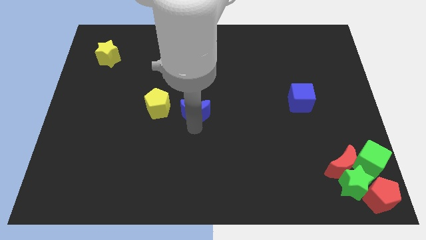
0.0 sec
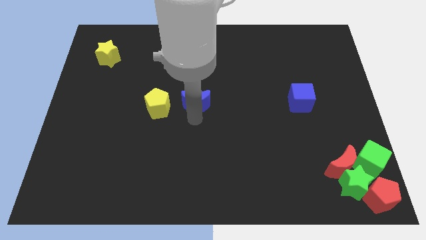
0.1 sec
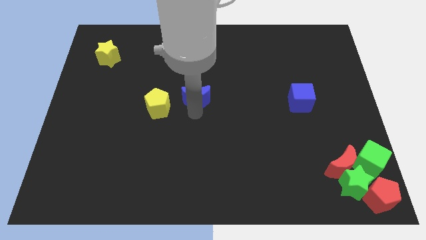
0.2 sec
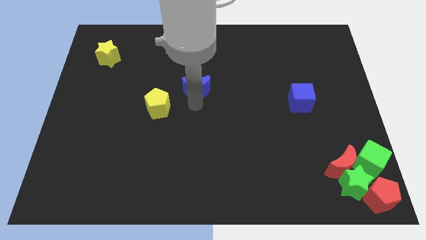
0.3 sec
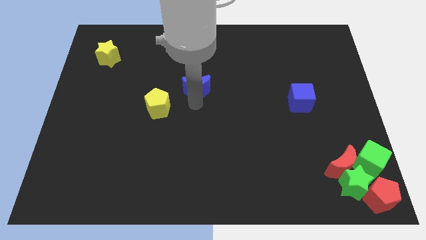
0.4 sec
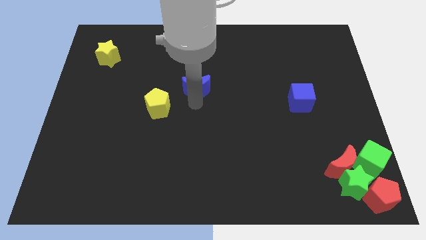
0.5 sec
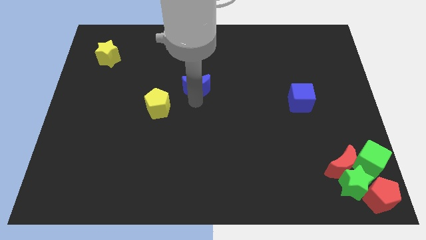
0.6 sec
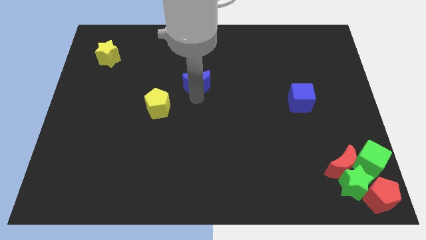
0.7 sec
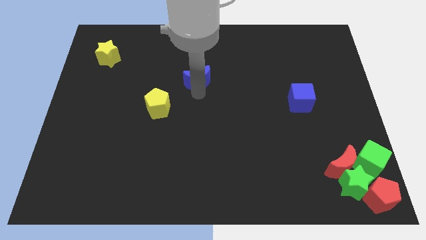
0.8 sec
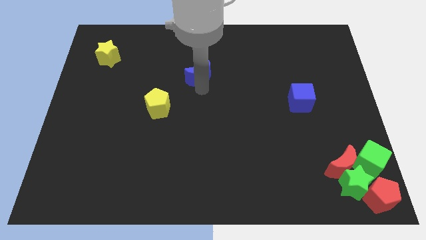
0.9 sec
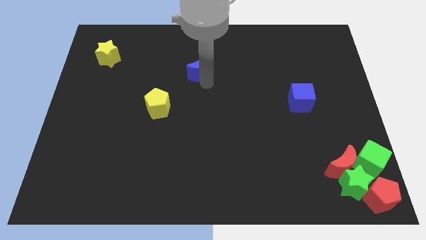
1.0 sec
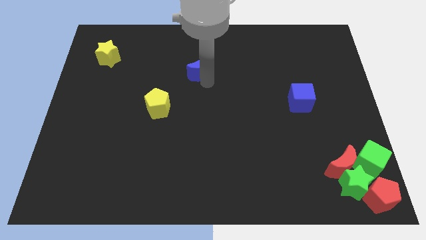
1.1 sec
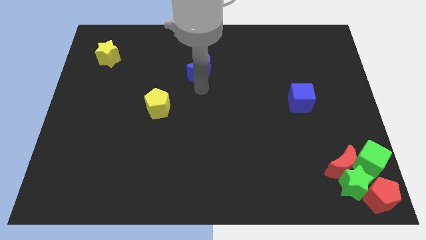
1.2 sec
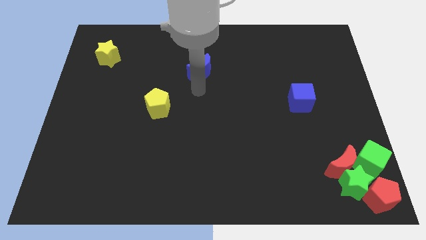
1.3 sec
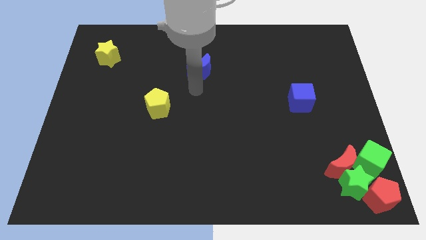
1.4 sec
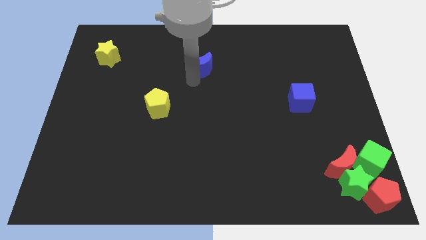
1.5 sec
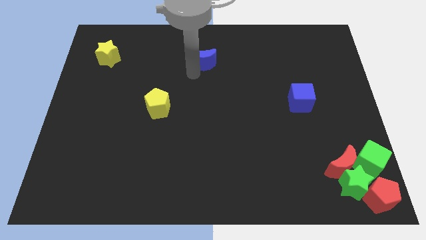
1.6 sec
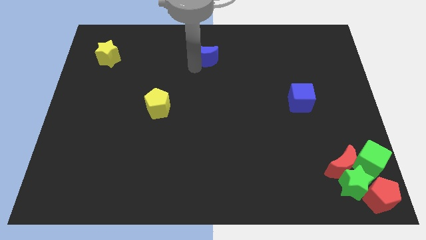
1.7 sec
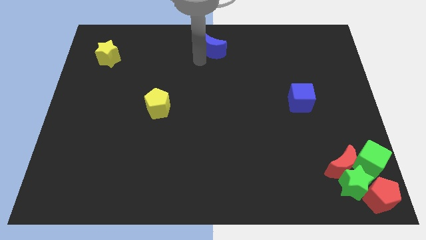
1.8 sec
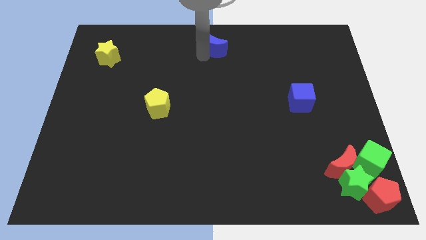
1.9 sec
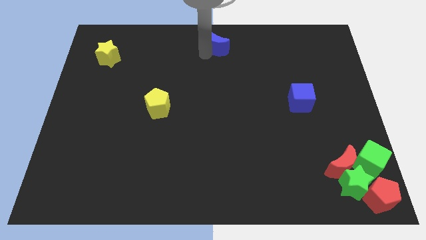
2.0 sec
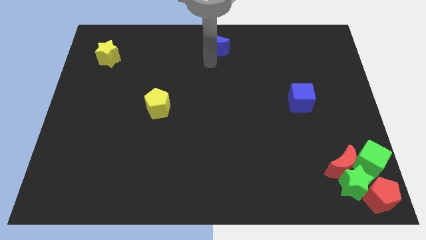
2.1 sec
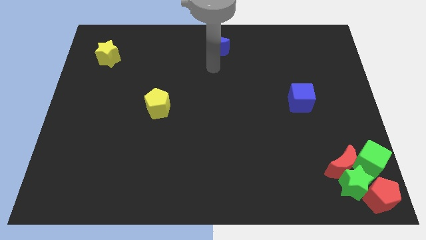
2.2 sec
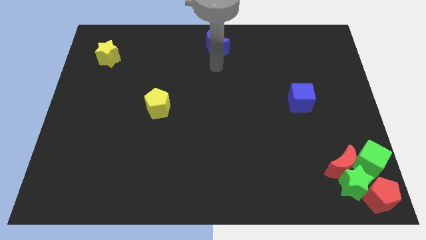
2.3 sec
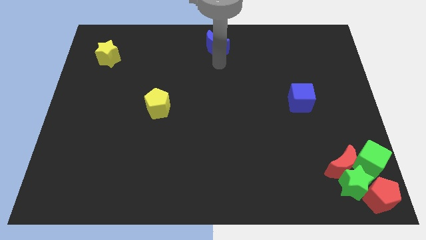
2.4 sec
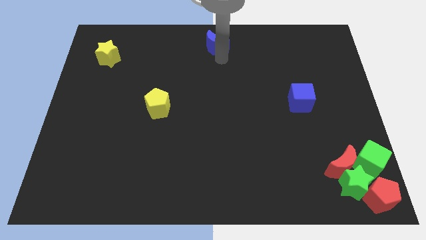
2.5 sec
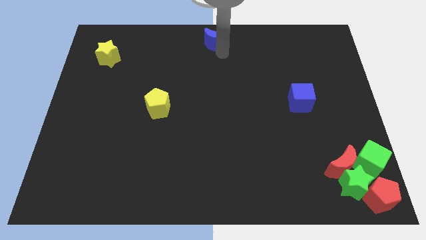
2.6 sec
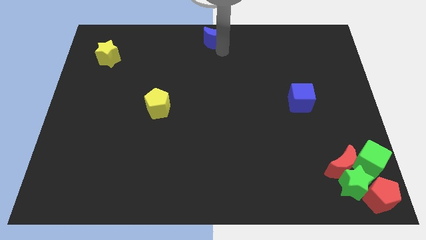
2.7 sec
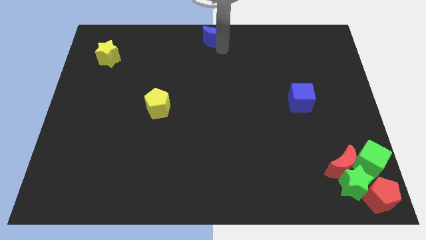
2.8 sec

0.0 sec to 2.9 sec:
push the blue crescent to the top center of the board

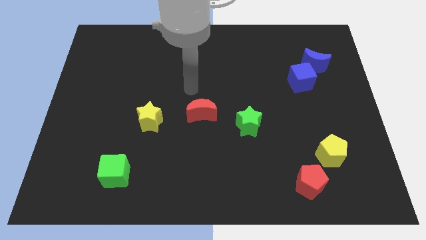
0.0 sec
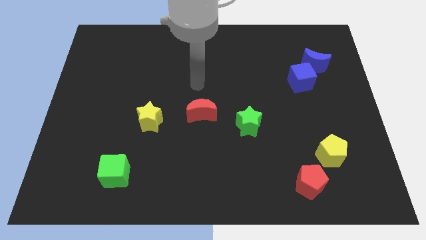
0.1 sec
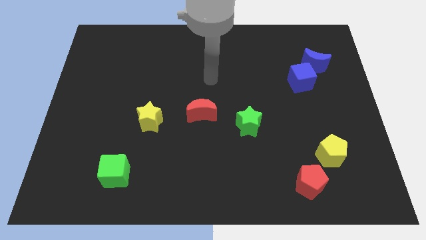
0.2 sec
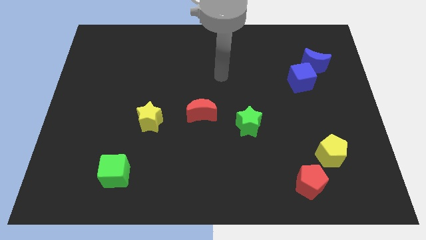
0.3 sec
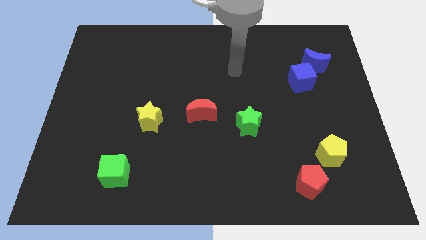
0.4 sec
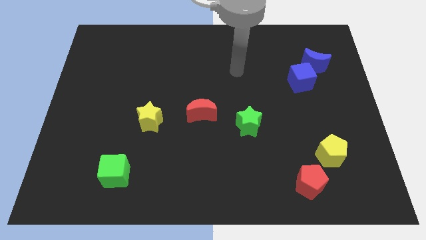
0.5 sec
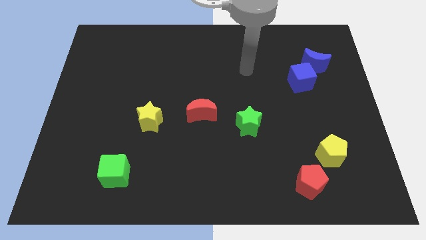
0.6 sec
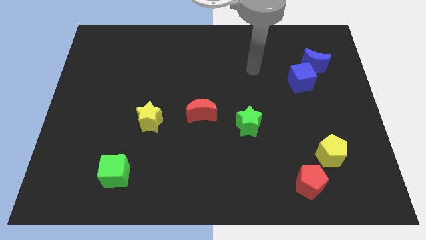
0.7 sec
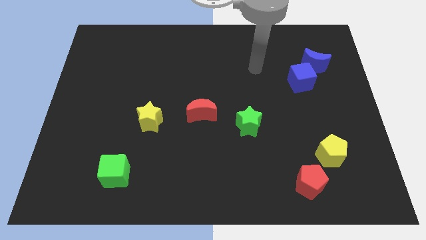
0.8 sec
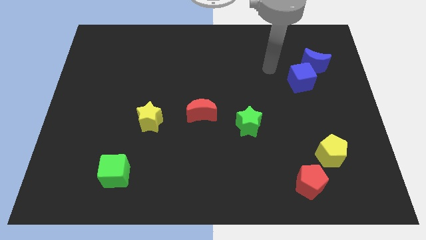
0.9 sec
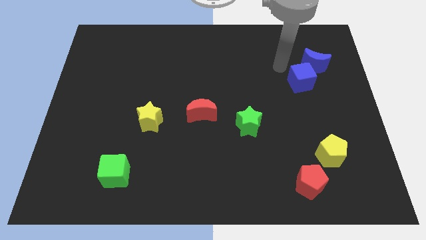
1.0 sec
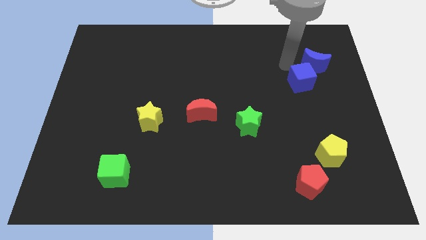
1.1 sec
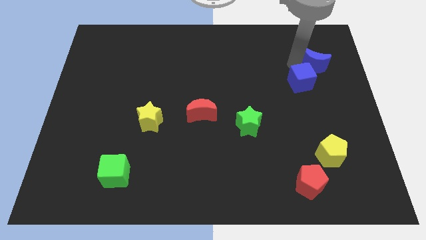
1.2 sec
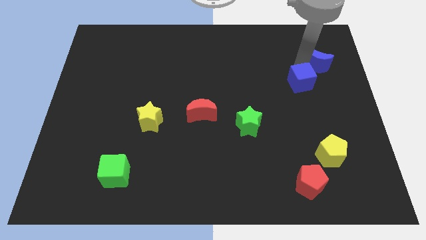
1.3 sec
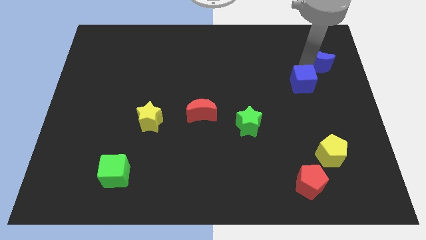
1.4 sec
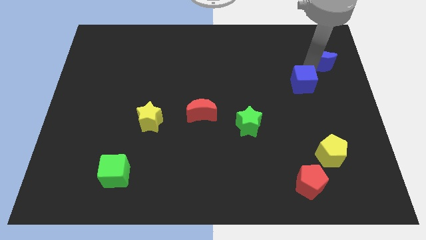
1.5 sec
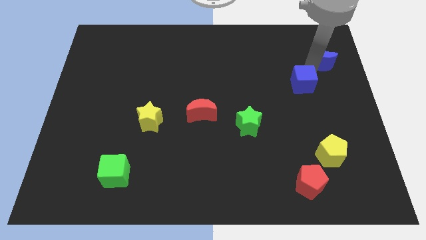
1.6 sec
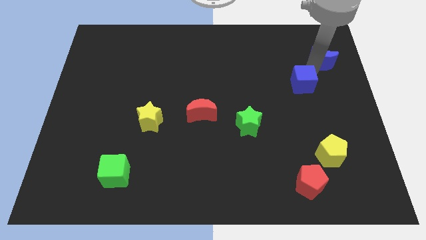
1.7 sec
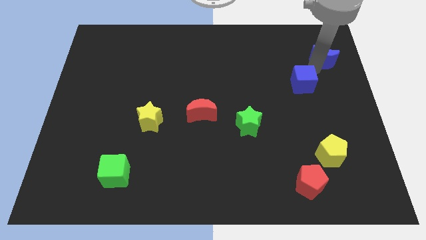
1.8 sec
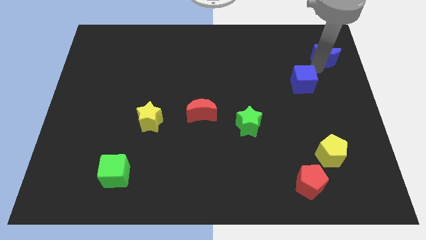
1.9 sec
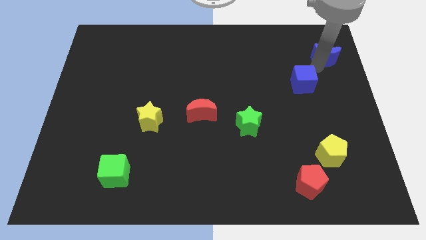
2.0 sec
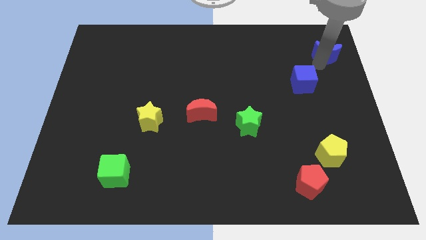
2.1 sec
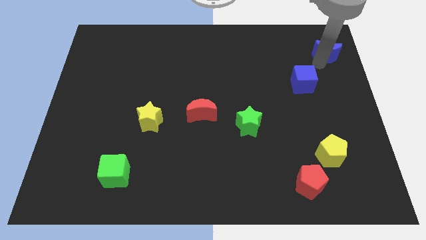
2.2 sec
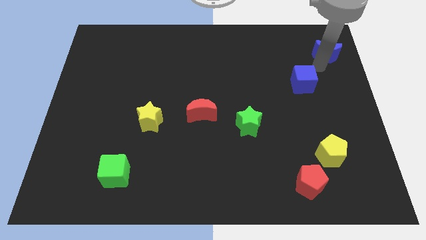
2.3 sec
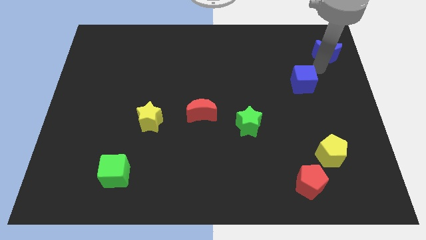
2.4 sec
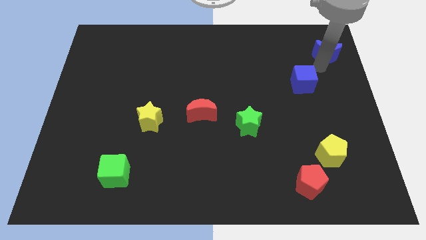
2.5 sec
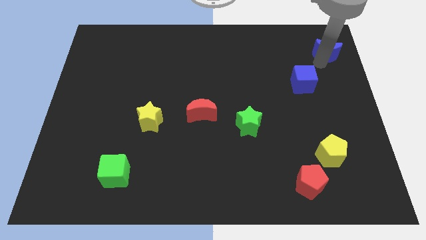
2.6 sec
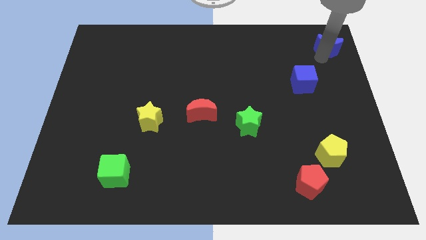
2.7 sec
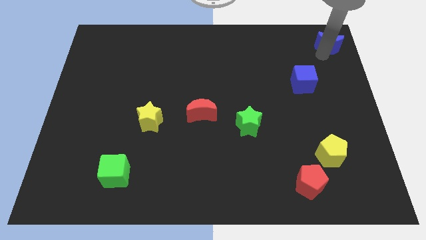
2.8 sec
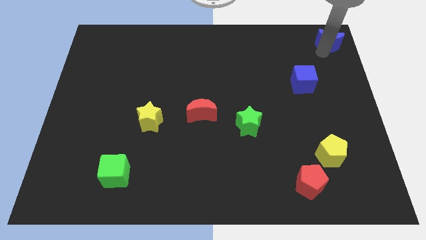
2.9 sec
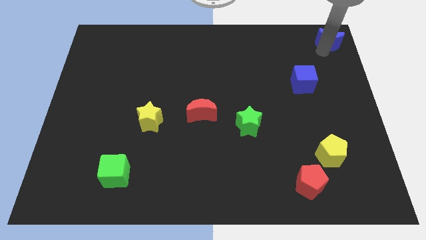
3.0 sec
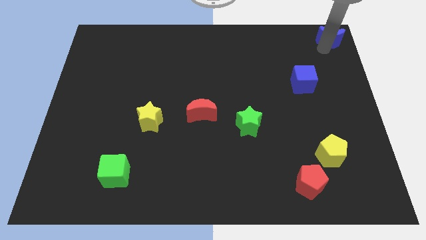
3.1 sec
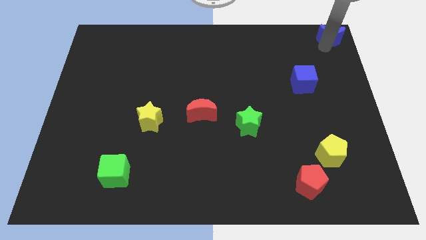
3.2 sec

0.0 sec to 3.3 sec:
separate the blue crescent from the blue cube

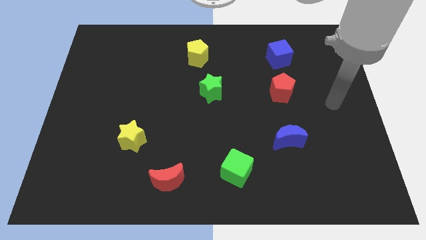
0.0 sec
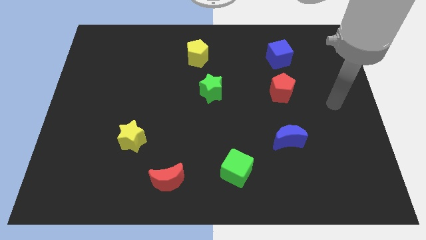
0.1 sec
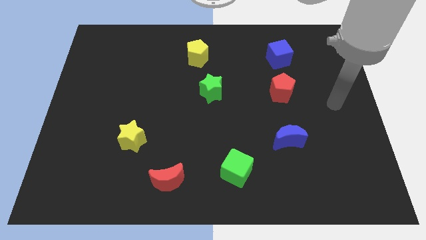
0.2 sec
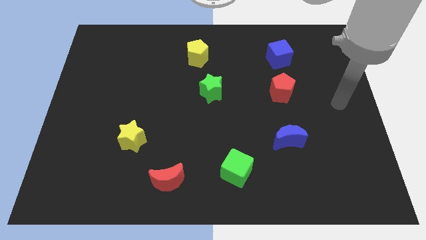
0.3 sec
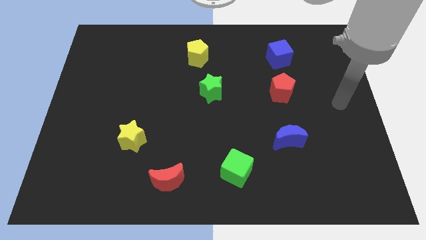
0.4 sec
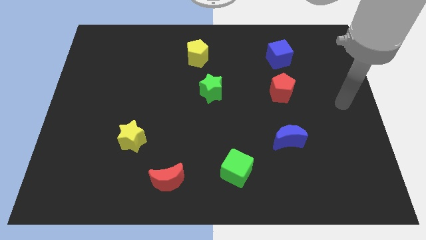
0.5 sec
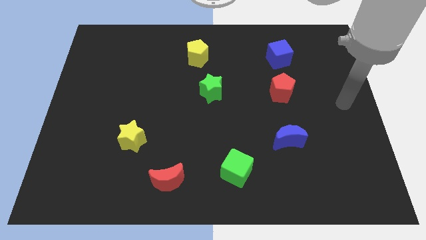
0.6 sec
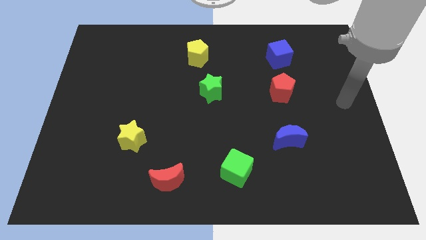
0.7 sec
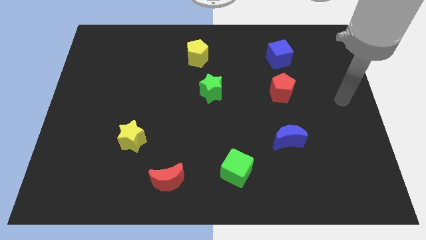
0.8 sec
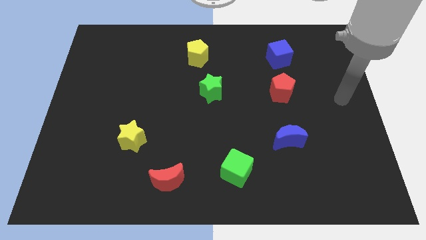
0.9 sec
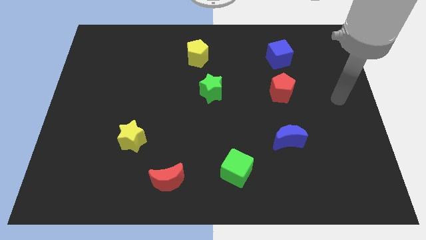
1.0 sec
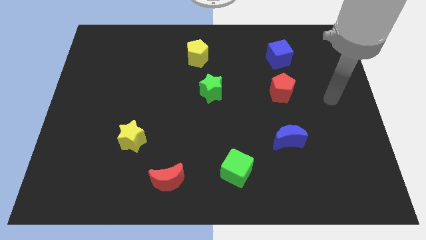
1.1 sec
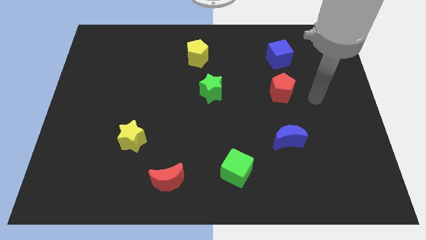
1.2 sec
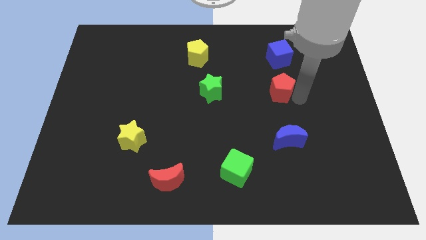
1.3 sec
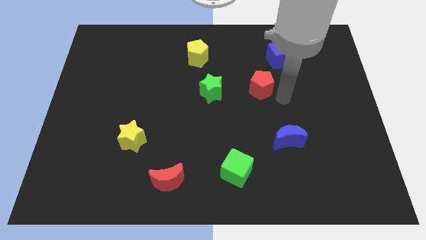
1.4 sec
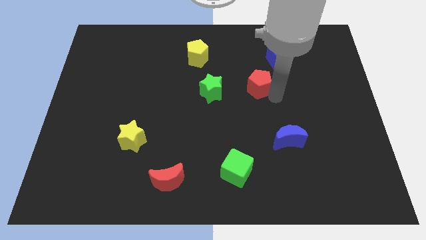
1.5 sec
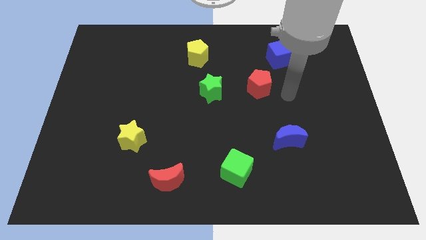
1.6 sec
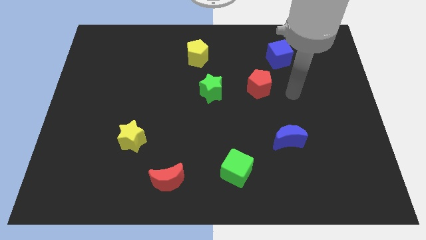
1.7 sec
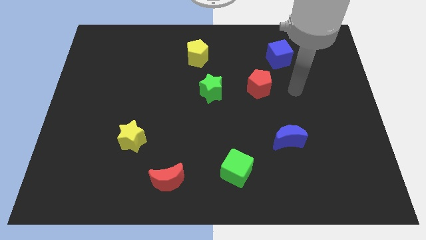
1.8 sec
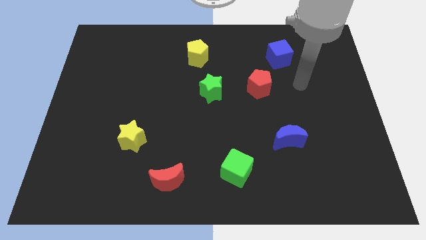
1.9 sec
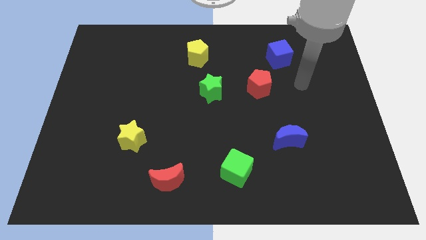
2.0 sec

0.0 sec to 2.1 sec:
slightly push the red pentagon towards the left

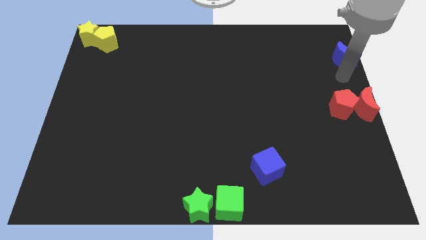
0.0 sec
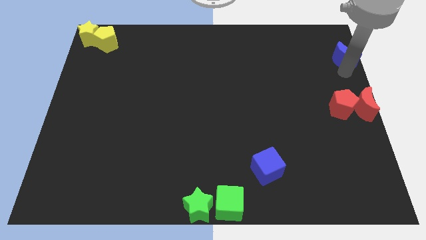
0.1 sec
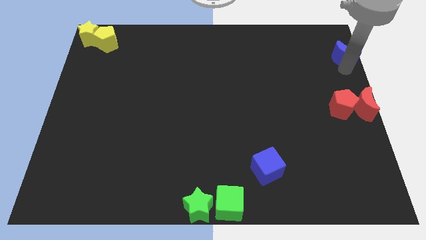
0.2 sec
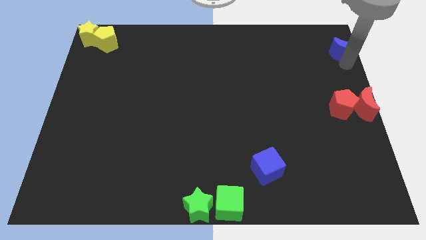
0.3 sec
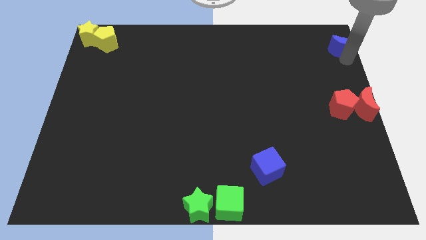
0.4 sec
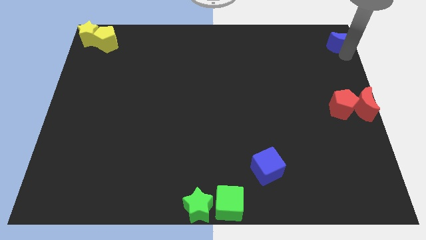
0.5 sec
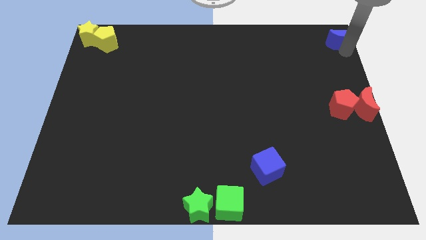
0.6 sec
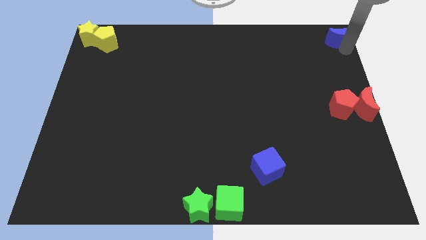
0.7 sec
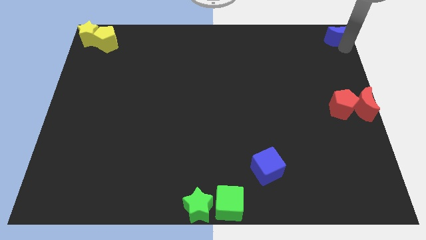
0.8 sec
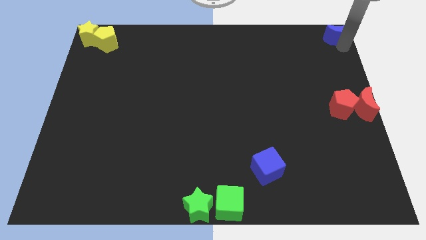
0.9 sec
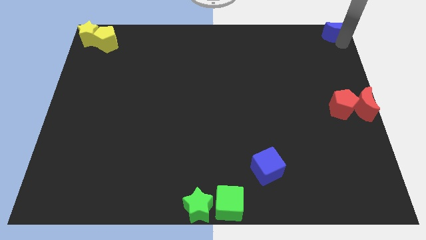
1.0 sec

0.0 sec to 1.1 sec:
move the blue crescent right top corner
